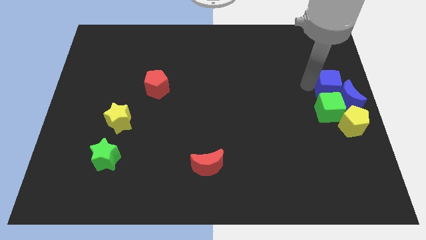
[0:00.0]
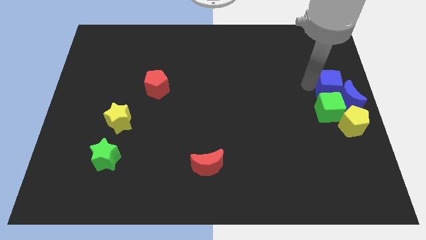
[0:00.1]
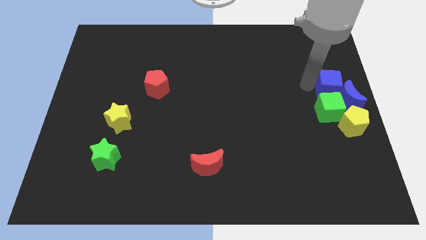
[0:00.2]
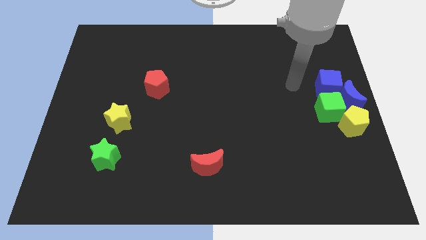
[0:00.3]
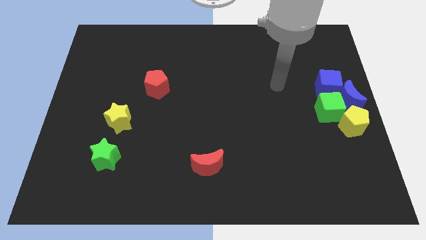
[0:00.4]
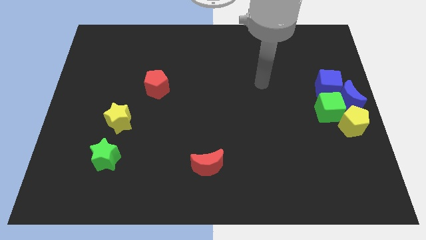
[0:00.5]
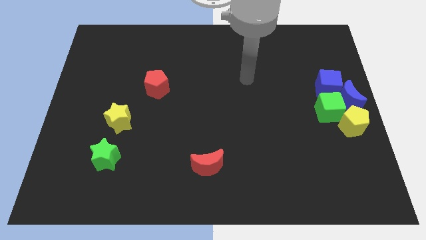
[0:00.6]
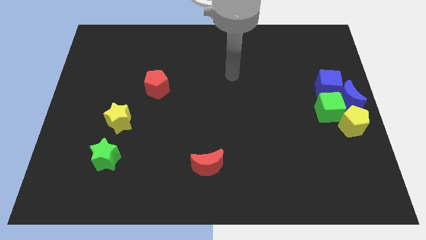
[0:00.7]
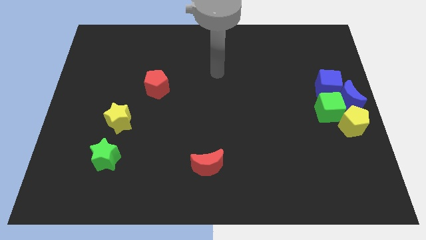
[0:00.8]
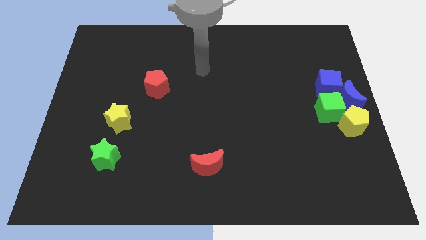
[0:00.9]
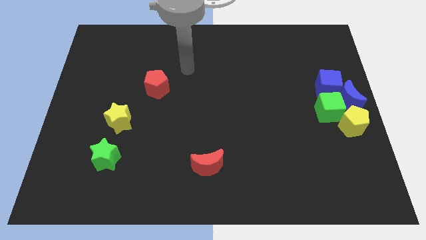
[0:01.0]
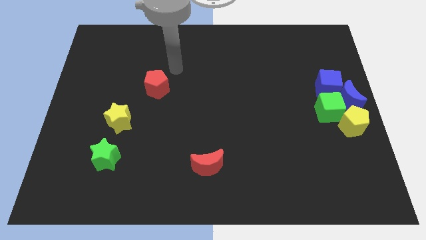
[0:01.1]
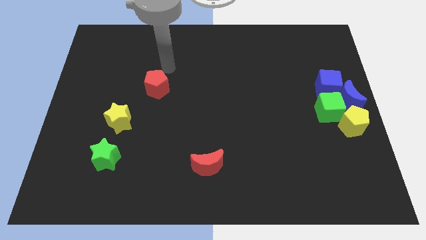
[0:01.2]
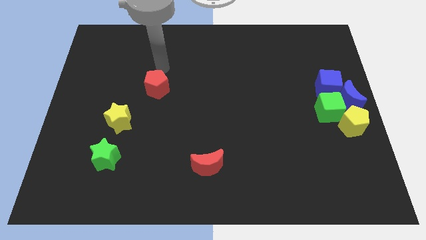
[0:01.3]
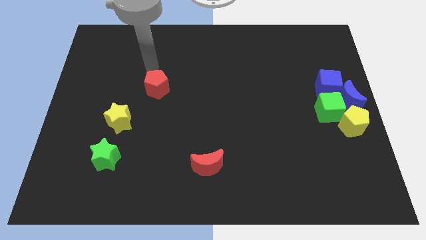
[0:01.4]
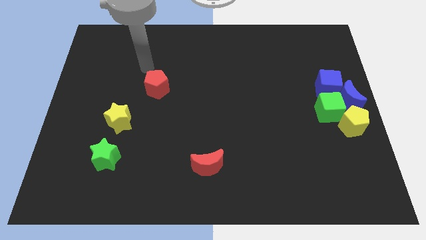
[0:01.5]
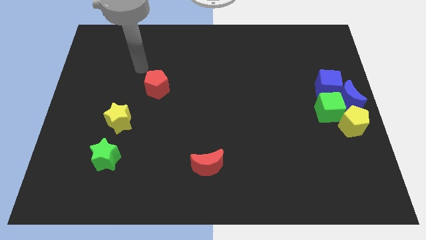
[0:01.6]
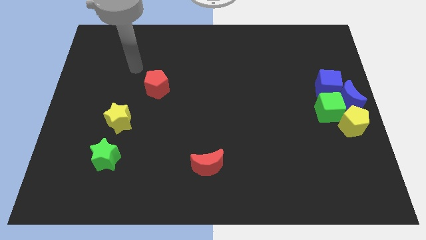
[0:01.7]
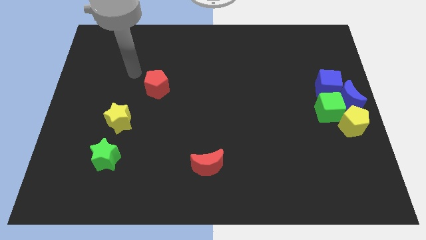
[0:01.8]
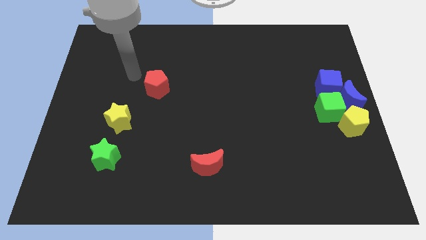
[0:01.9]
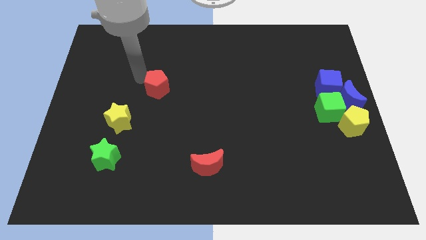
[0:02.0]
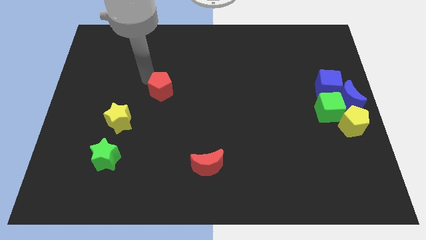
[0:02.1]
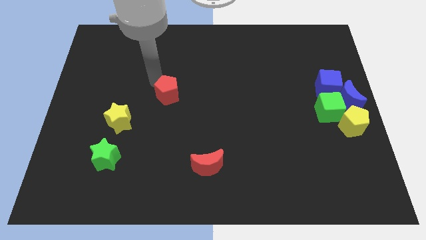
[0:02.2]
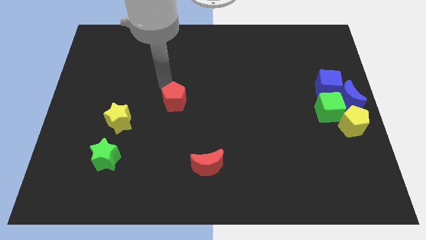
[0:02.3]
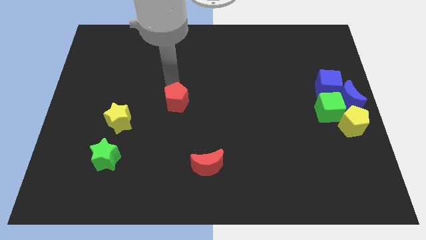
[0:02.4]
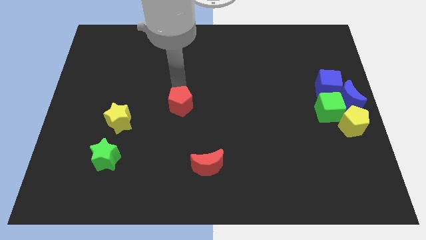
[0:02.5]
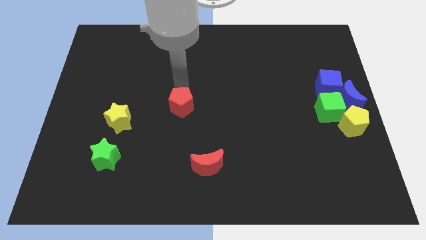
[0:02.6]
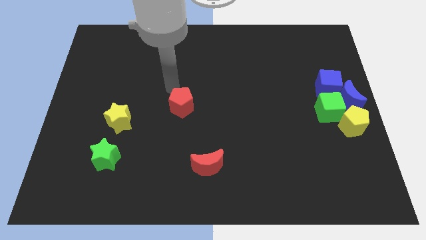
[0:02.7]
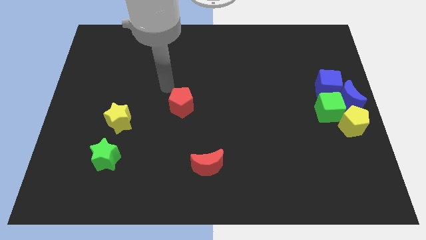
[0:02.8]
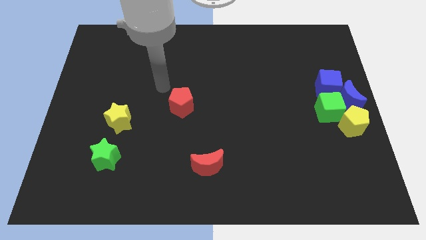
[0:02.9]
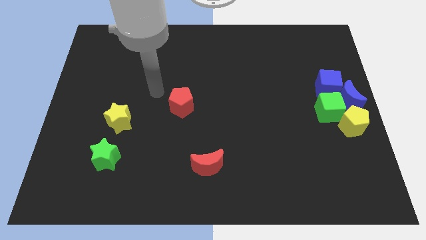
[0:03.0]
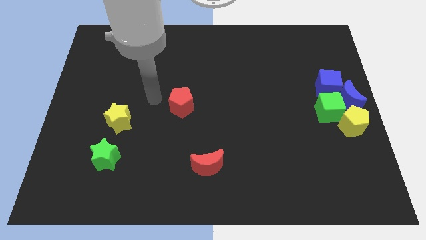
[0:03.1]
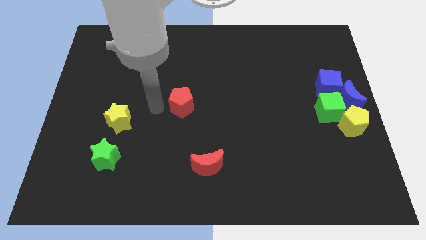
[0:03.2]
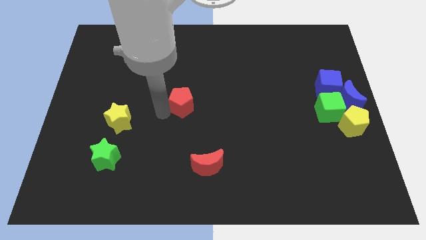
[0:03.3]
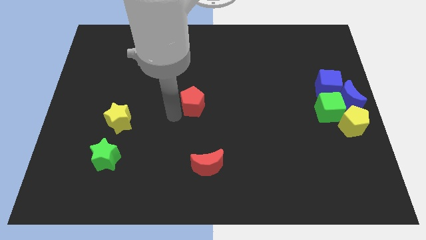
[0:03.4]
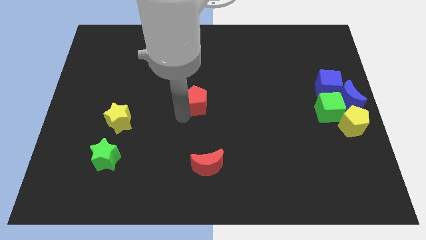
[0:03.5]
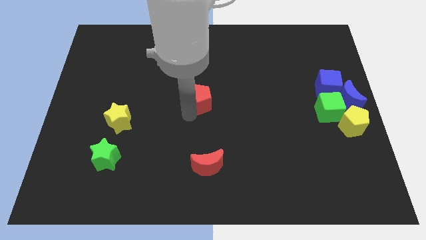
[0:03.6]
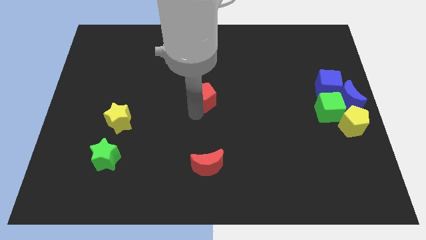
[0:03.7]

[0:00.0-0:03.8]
place the red pentagon above the red moon

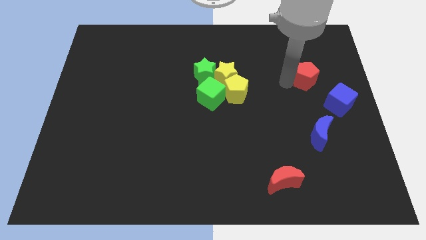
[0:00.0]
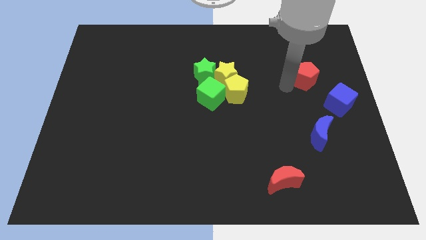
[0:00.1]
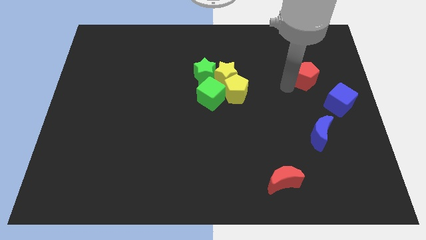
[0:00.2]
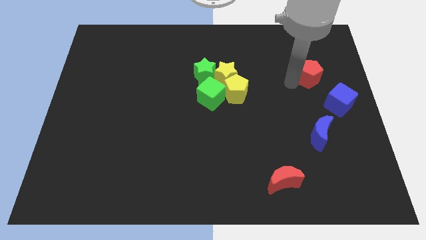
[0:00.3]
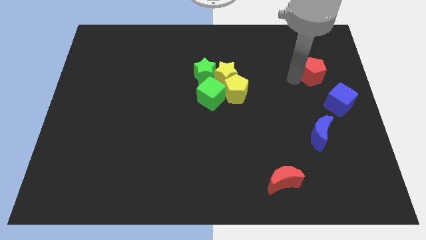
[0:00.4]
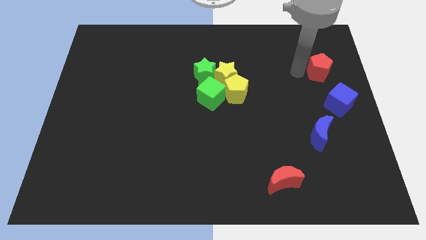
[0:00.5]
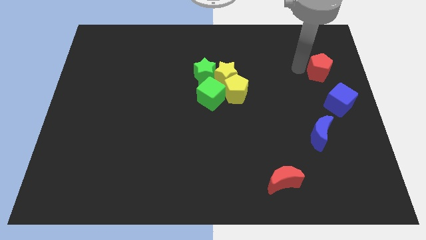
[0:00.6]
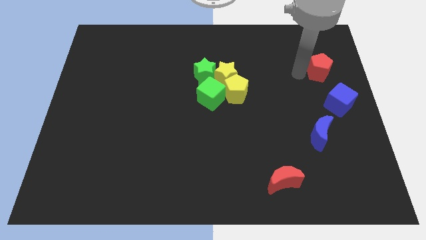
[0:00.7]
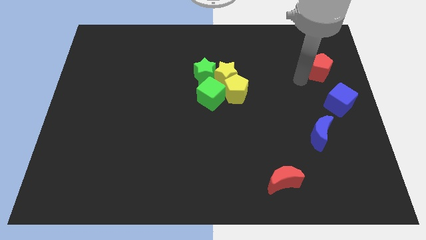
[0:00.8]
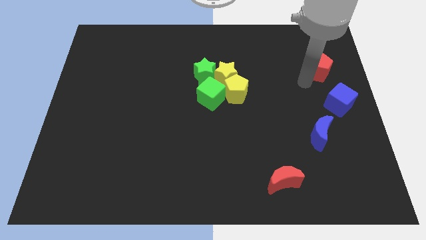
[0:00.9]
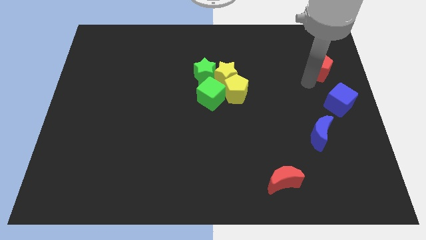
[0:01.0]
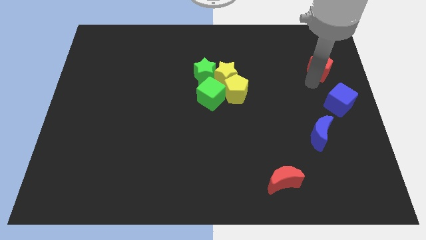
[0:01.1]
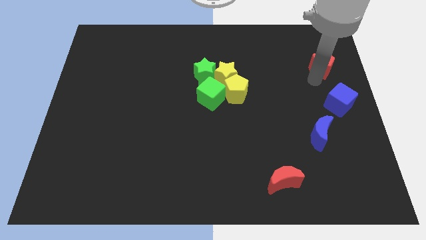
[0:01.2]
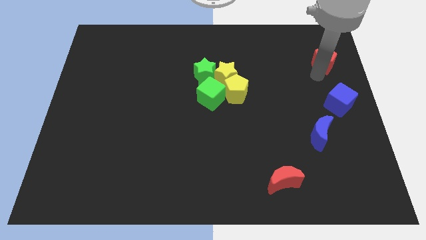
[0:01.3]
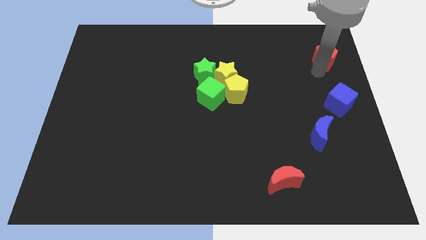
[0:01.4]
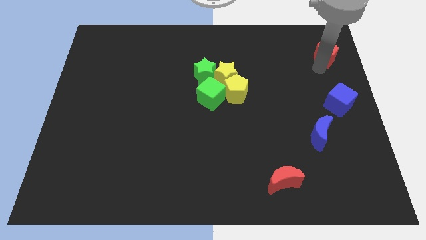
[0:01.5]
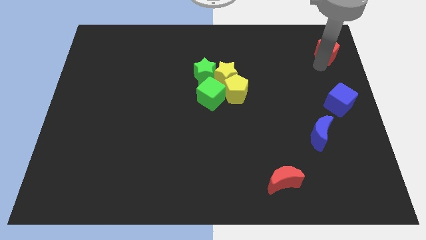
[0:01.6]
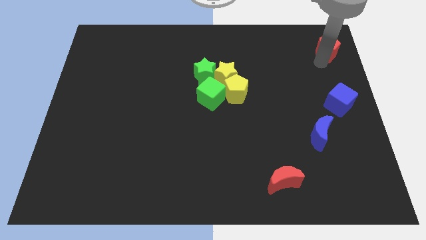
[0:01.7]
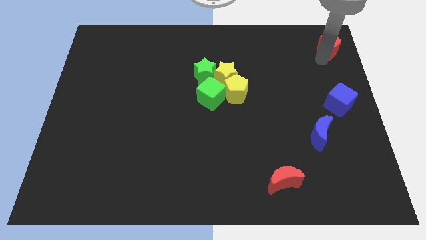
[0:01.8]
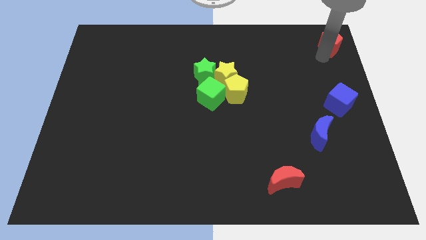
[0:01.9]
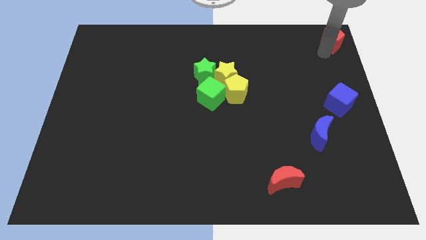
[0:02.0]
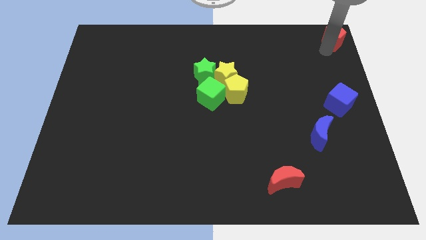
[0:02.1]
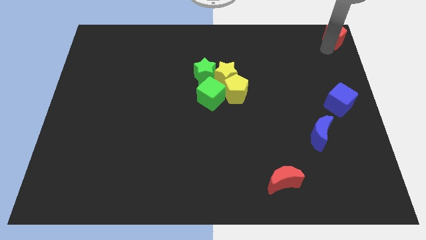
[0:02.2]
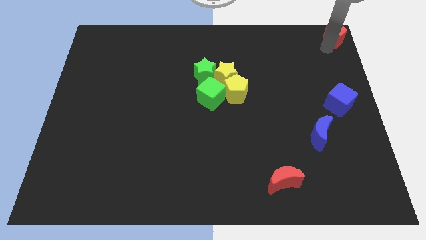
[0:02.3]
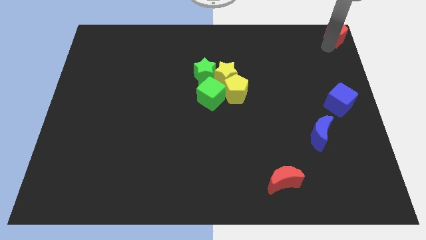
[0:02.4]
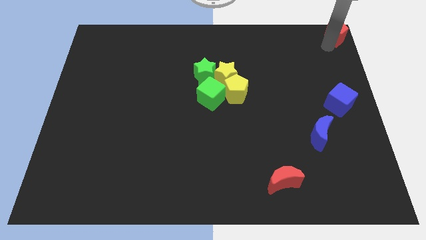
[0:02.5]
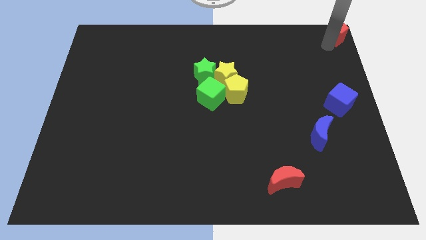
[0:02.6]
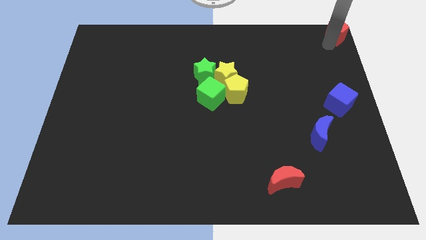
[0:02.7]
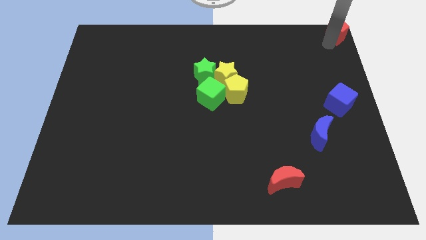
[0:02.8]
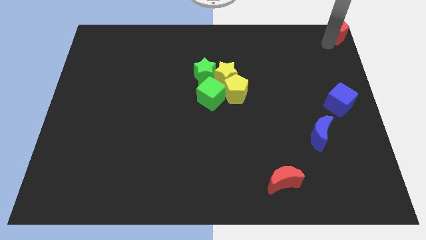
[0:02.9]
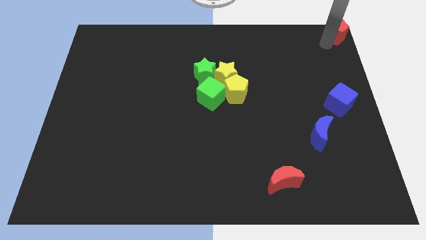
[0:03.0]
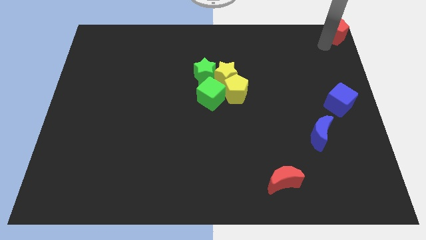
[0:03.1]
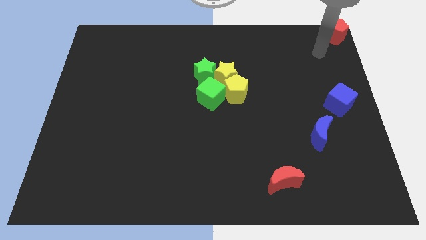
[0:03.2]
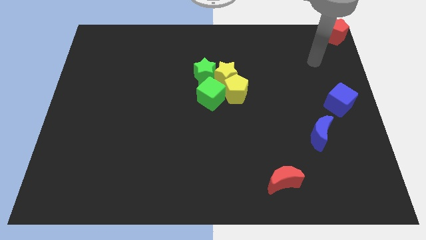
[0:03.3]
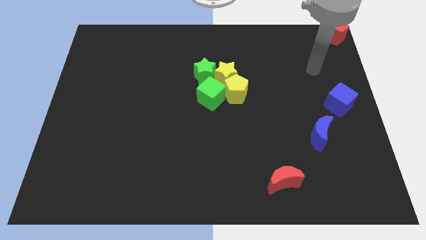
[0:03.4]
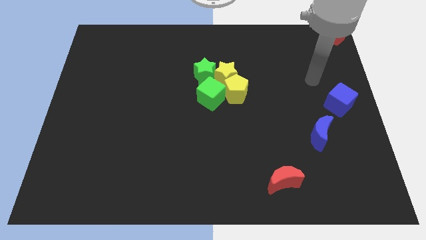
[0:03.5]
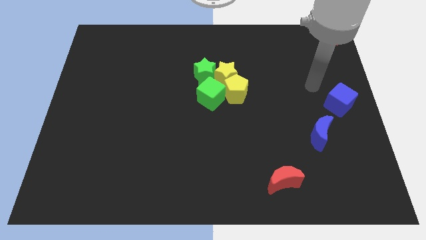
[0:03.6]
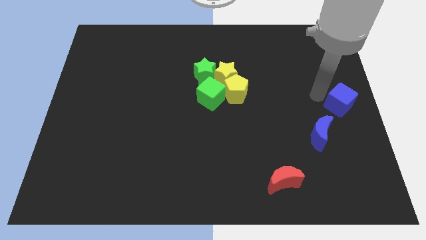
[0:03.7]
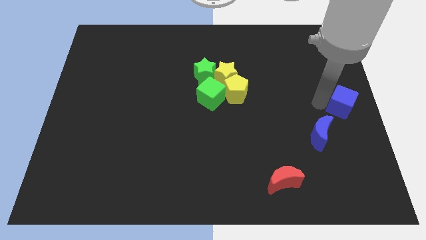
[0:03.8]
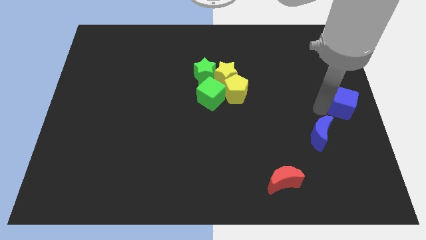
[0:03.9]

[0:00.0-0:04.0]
move the red pentagon to the top right corner

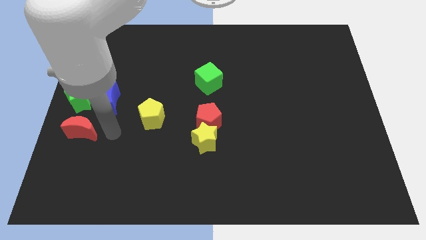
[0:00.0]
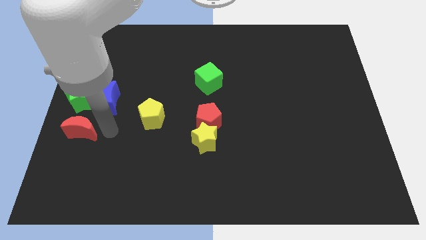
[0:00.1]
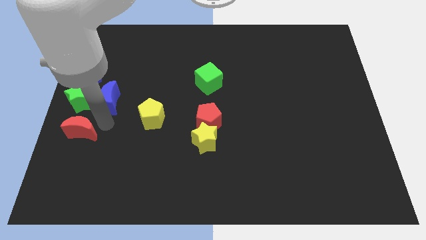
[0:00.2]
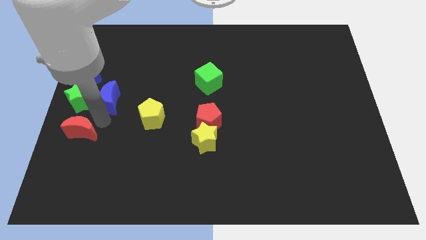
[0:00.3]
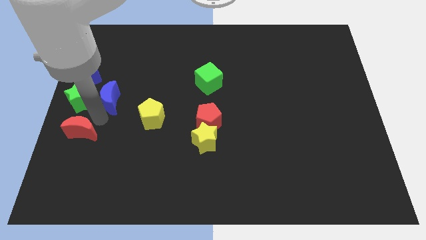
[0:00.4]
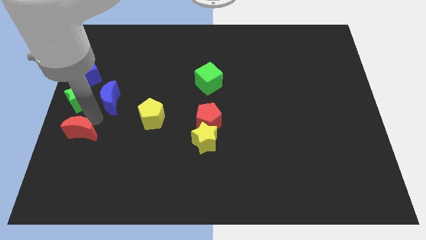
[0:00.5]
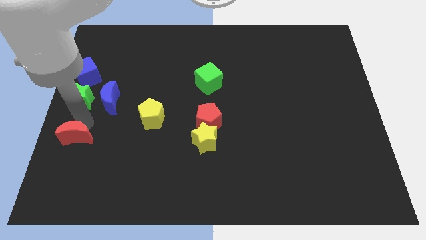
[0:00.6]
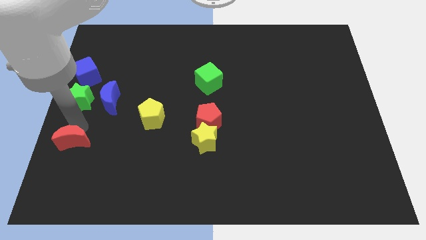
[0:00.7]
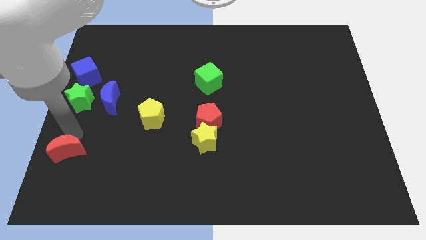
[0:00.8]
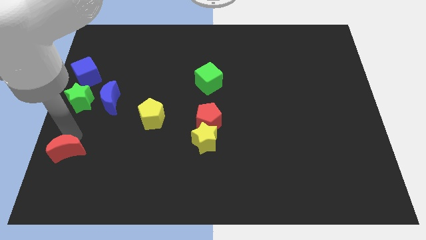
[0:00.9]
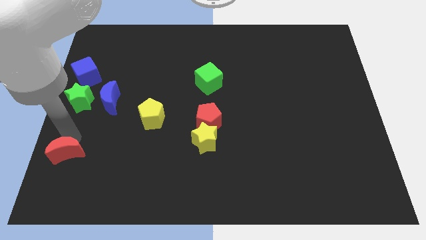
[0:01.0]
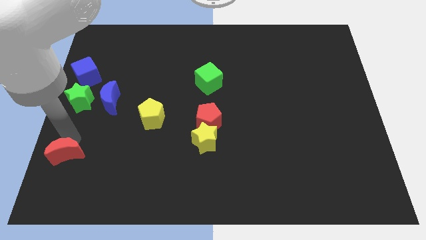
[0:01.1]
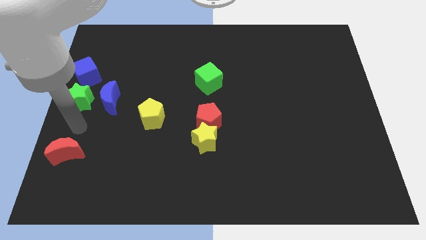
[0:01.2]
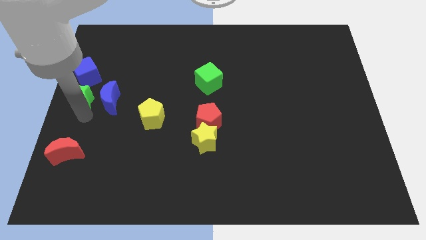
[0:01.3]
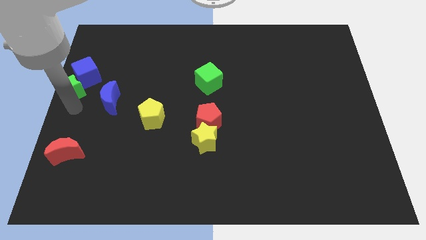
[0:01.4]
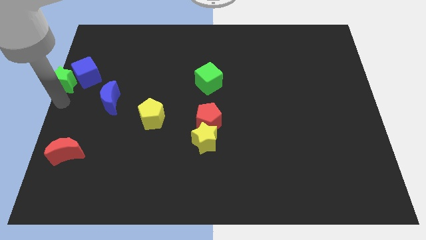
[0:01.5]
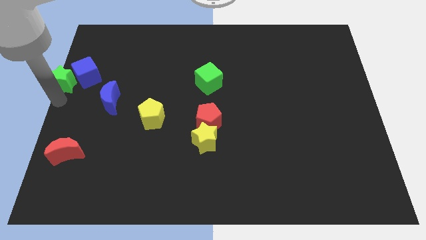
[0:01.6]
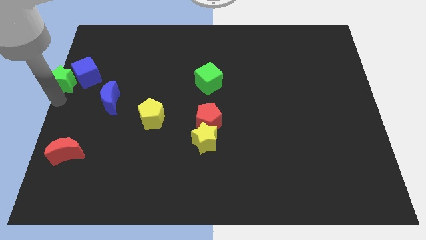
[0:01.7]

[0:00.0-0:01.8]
move the red crescent slightly downward to the bottom left of the board
